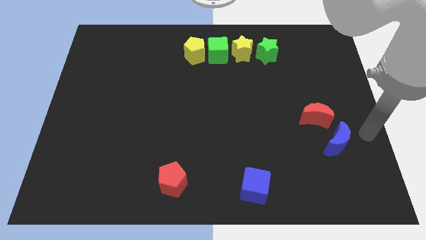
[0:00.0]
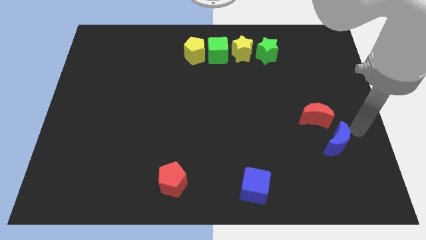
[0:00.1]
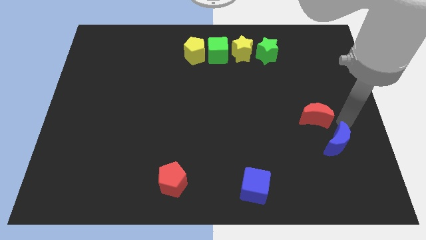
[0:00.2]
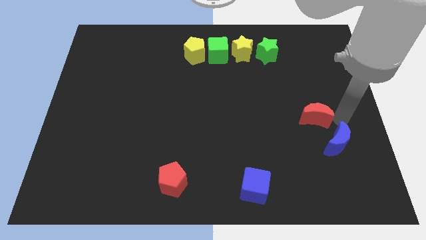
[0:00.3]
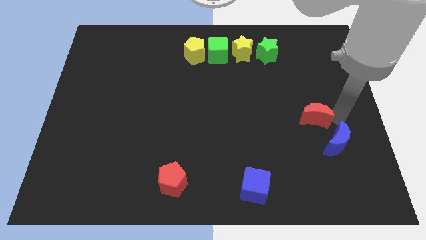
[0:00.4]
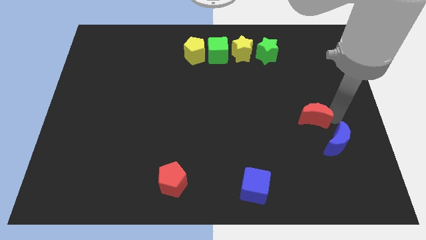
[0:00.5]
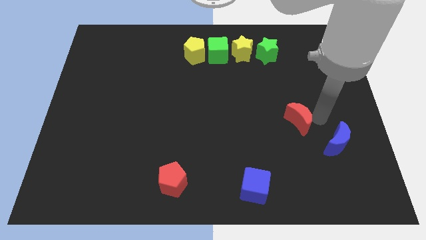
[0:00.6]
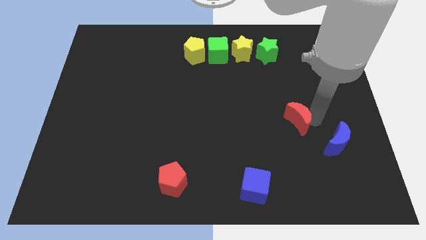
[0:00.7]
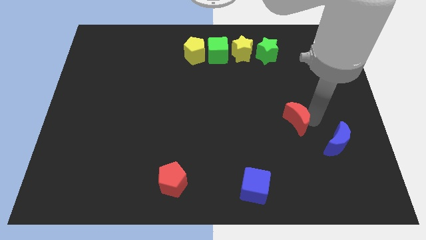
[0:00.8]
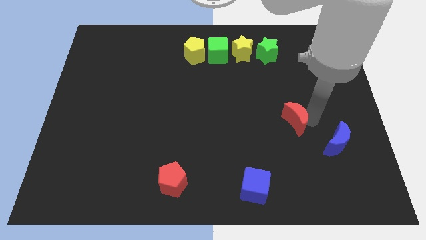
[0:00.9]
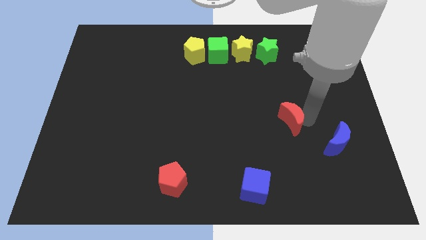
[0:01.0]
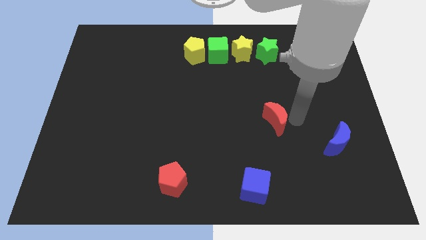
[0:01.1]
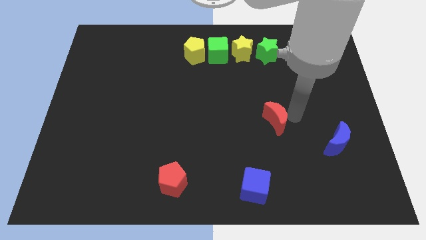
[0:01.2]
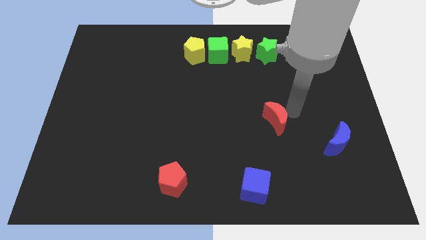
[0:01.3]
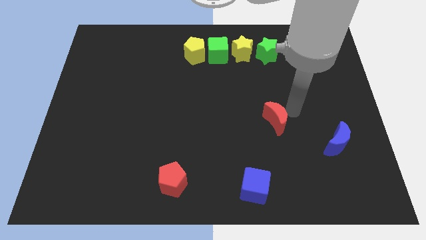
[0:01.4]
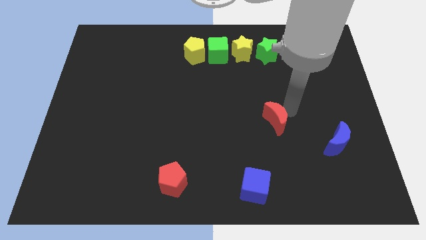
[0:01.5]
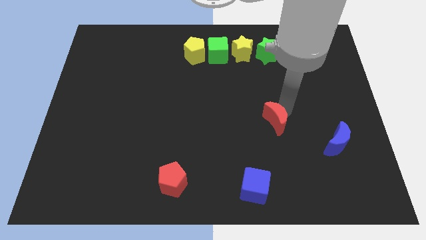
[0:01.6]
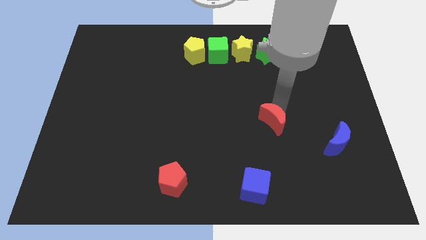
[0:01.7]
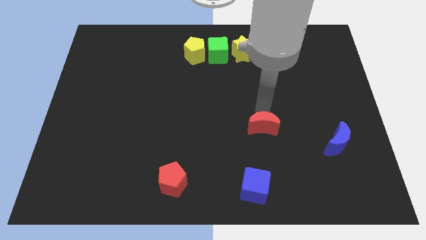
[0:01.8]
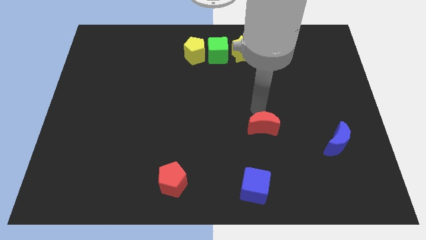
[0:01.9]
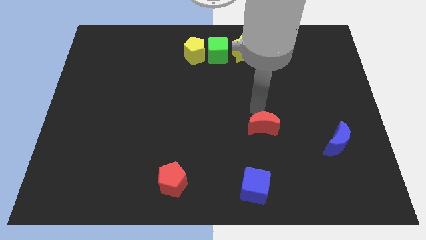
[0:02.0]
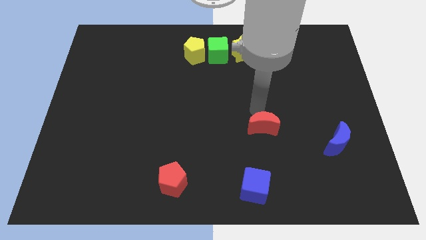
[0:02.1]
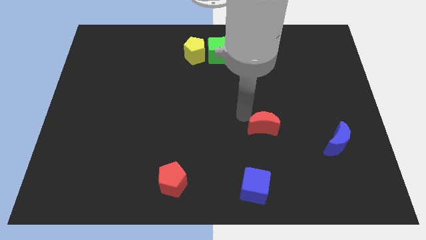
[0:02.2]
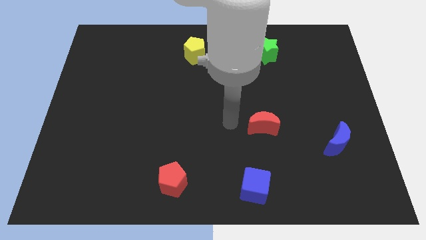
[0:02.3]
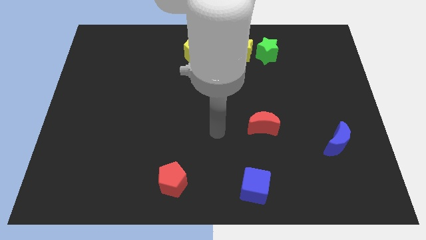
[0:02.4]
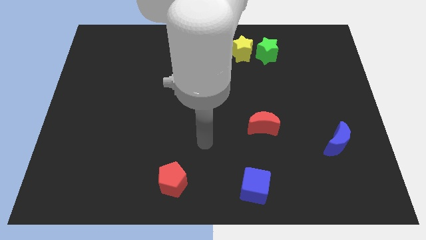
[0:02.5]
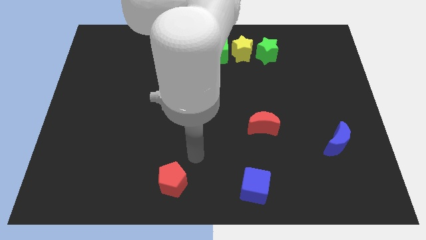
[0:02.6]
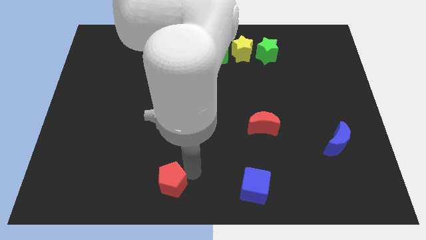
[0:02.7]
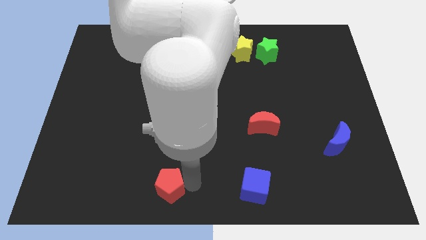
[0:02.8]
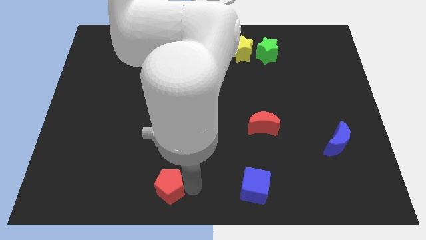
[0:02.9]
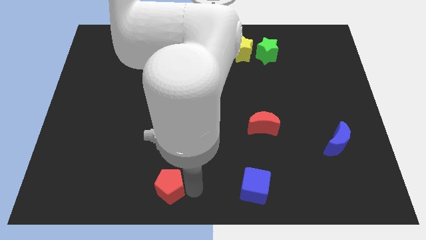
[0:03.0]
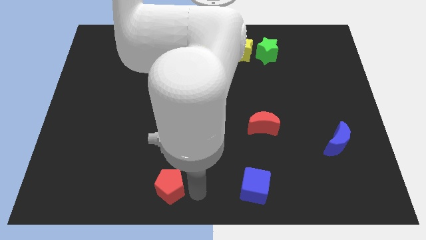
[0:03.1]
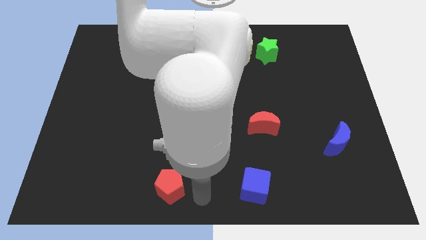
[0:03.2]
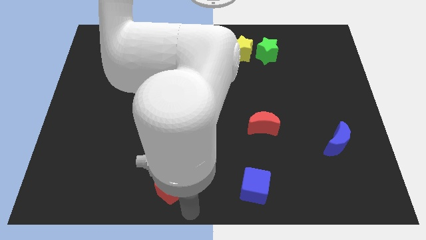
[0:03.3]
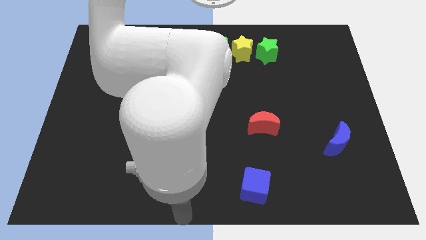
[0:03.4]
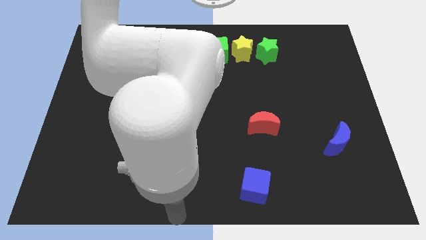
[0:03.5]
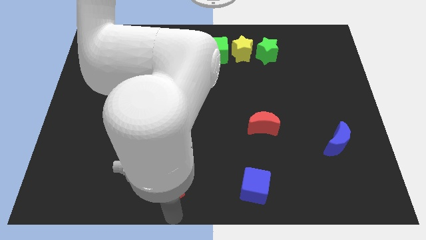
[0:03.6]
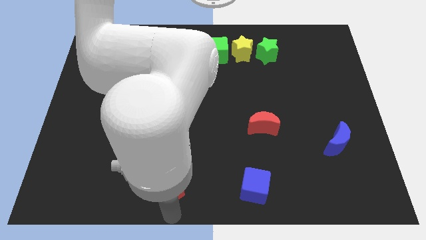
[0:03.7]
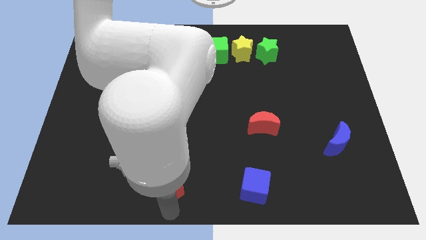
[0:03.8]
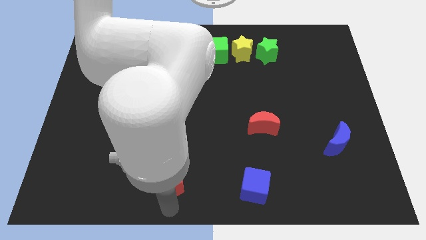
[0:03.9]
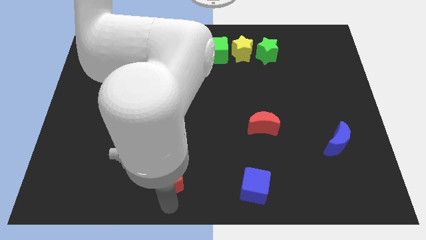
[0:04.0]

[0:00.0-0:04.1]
place your arm below red pentagon

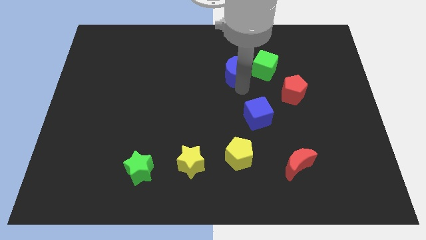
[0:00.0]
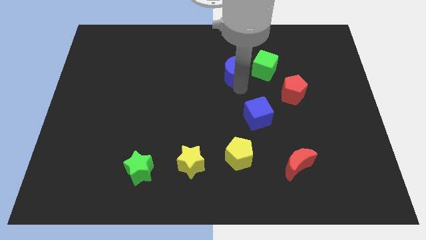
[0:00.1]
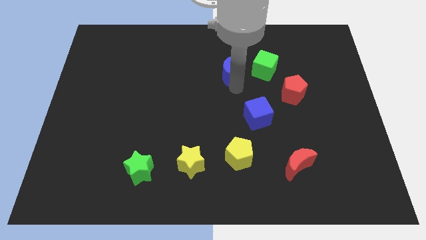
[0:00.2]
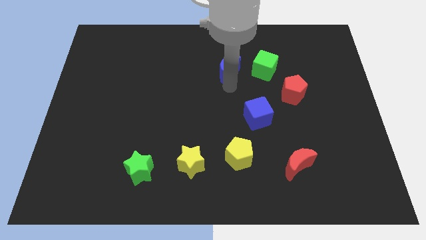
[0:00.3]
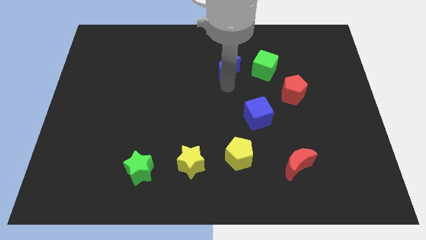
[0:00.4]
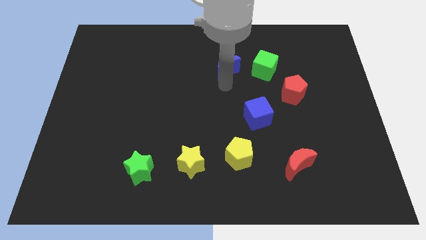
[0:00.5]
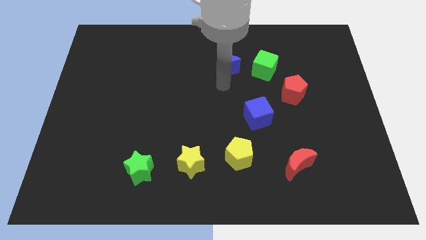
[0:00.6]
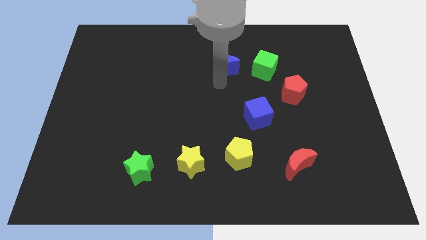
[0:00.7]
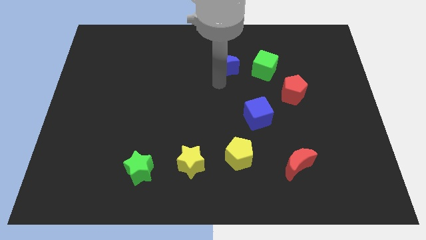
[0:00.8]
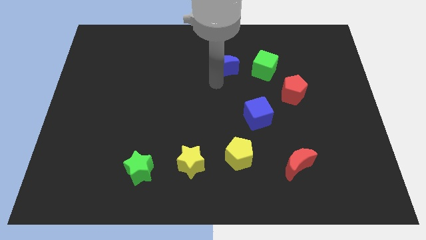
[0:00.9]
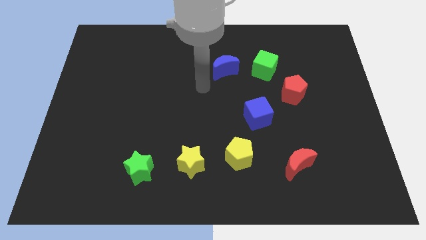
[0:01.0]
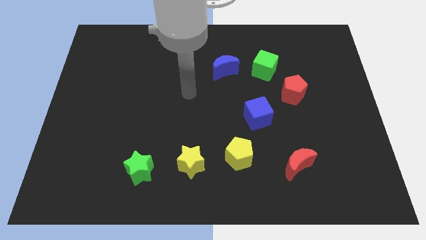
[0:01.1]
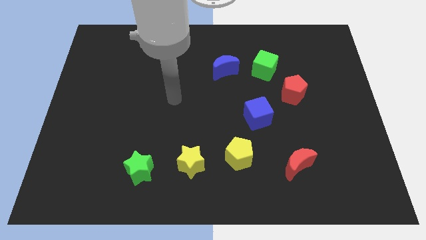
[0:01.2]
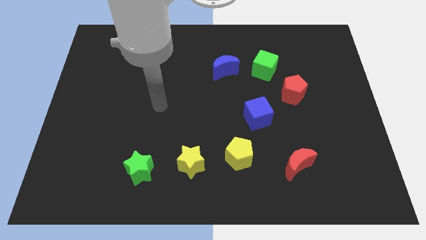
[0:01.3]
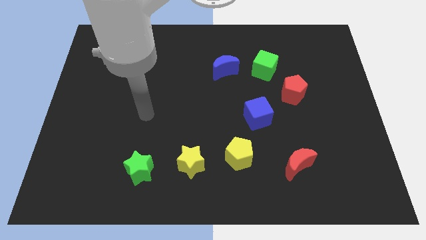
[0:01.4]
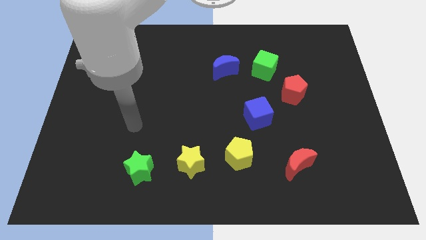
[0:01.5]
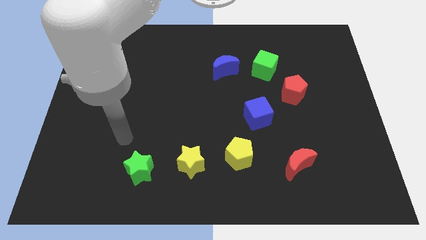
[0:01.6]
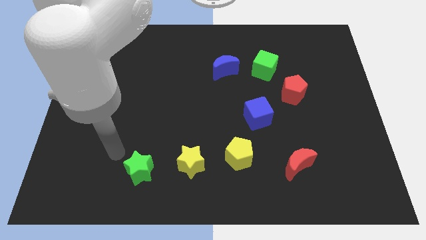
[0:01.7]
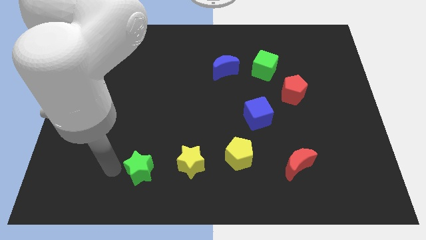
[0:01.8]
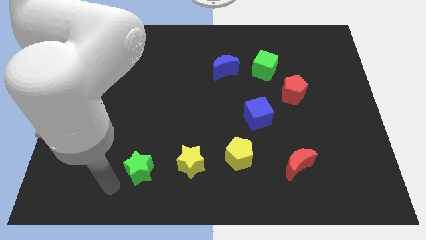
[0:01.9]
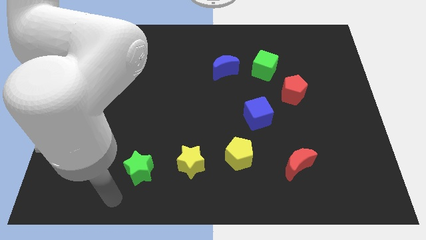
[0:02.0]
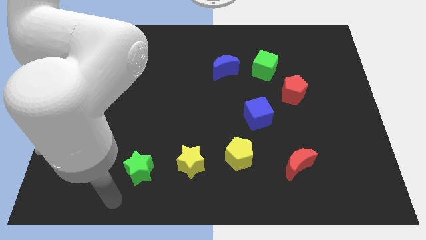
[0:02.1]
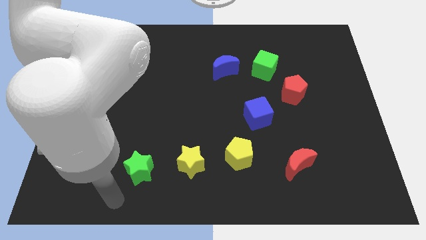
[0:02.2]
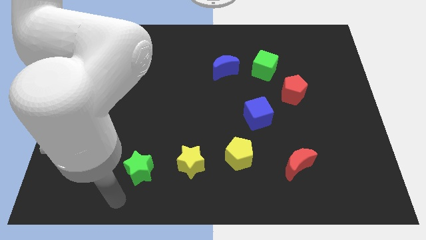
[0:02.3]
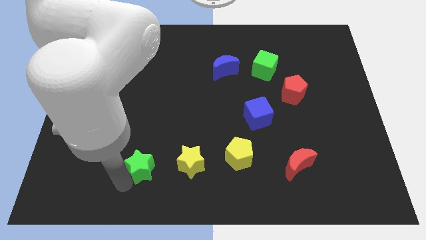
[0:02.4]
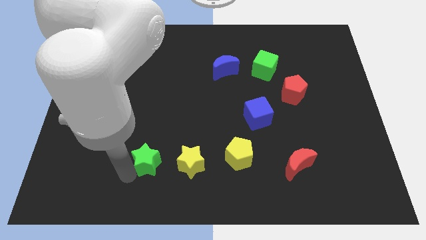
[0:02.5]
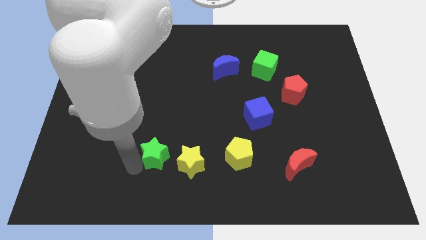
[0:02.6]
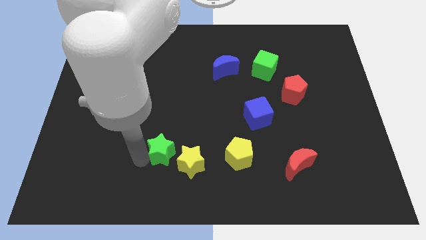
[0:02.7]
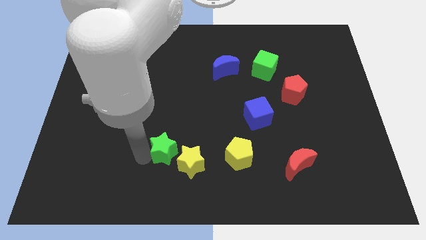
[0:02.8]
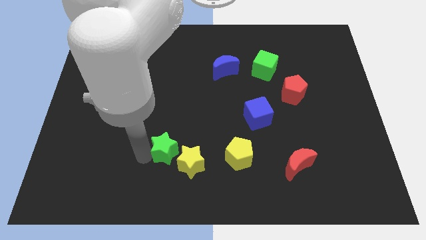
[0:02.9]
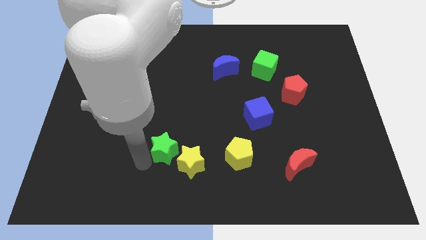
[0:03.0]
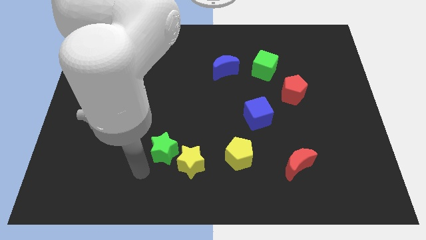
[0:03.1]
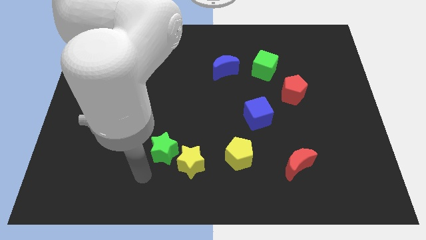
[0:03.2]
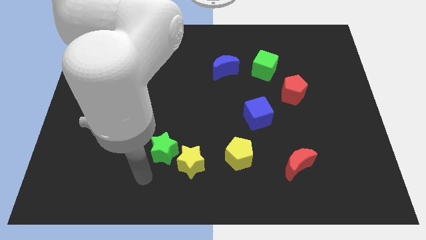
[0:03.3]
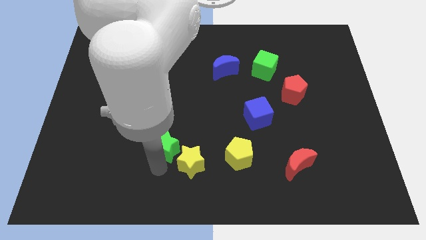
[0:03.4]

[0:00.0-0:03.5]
push the green star diagonal top left to yellow star

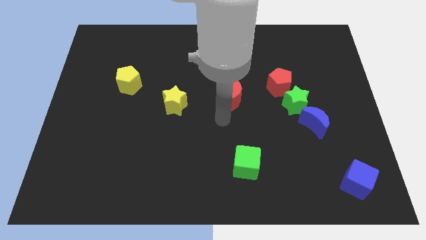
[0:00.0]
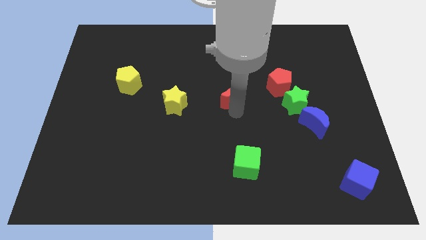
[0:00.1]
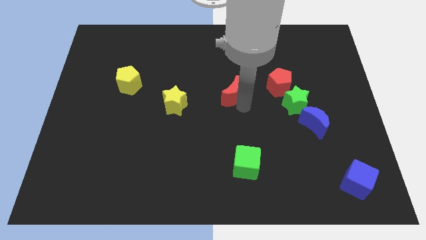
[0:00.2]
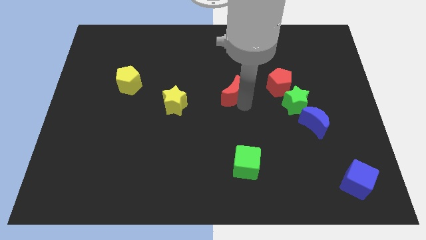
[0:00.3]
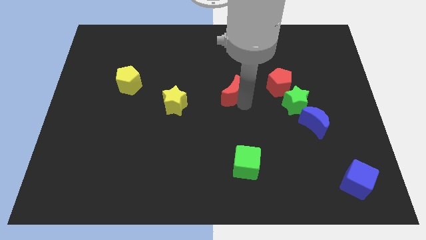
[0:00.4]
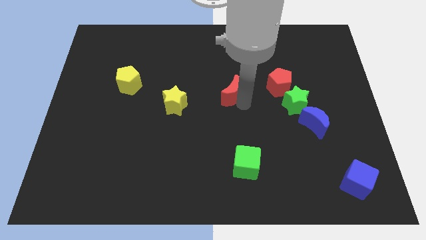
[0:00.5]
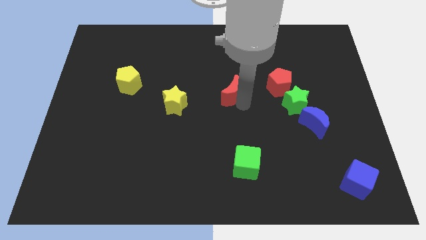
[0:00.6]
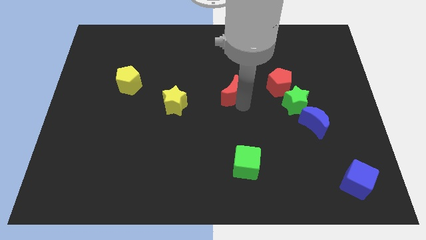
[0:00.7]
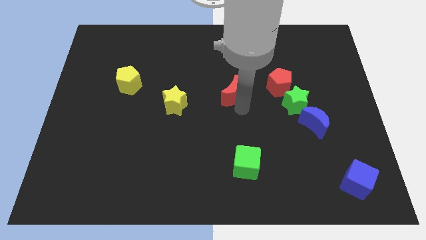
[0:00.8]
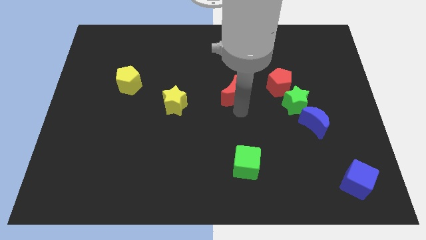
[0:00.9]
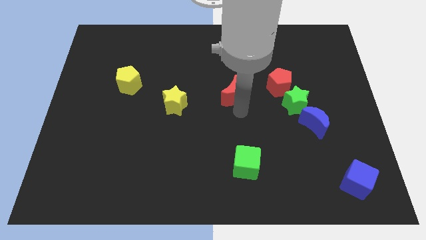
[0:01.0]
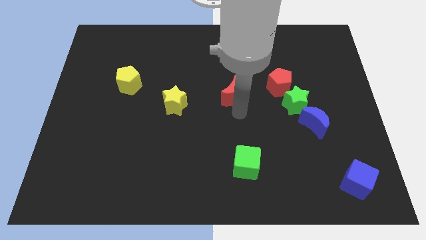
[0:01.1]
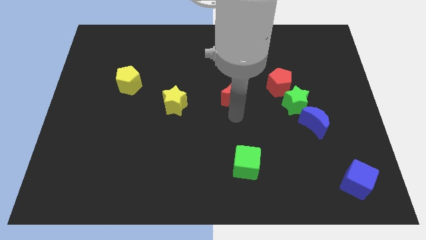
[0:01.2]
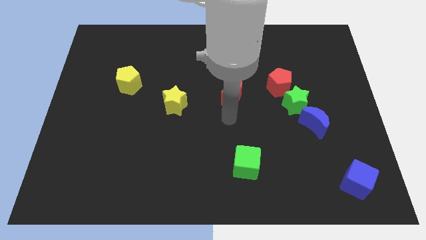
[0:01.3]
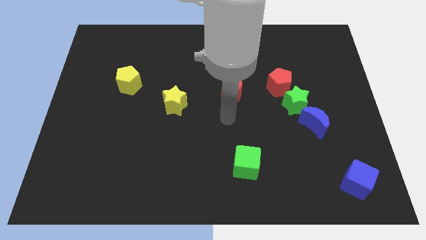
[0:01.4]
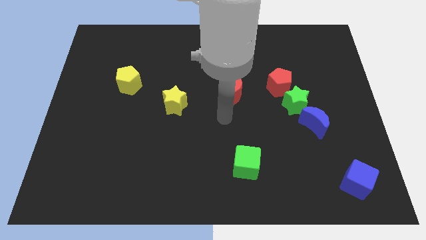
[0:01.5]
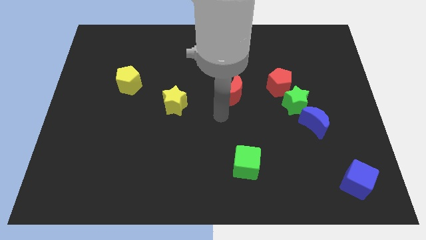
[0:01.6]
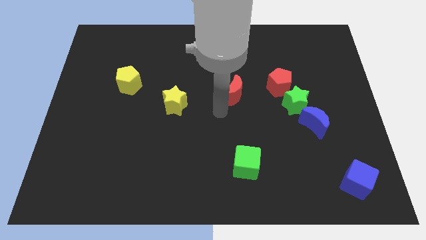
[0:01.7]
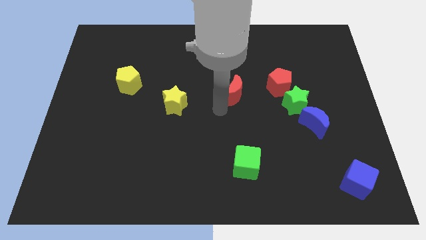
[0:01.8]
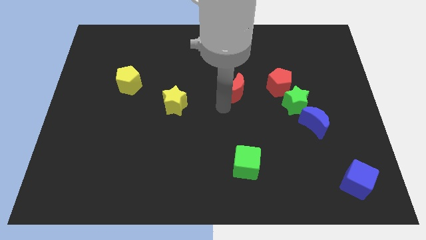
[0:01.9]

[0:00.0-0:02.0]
move the red moon slightly up
